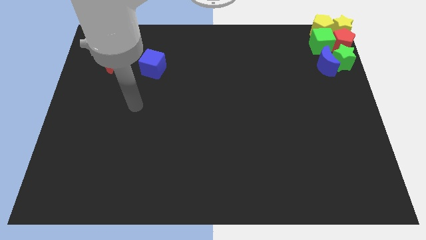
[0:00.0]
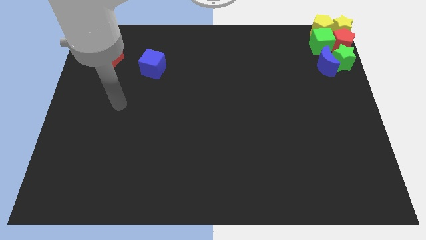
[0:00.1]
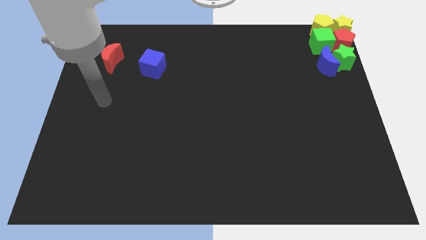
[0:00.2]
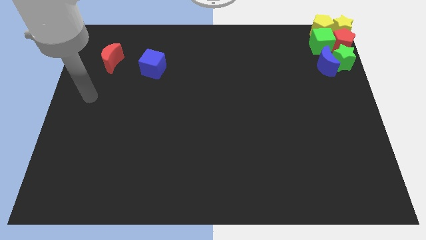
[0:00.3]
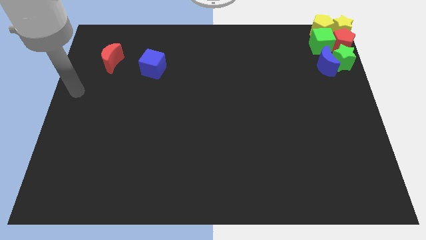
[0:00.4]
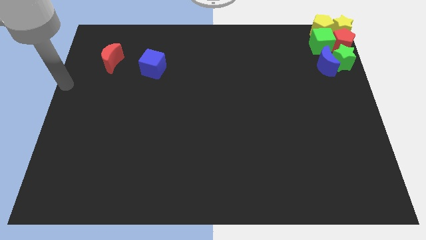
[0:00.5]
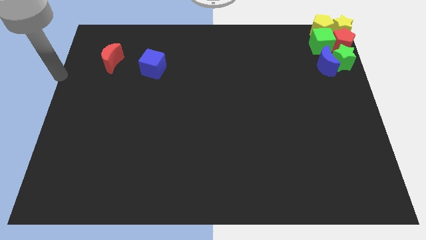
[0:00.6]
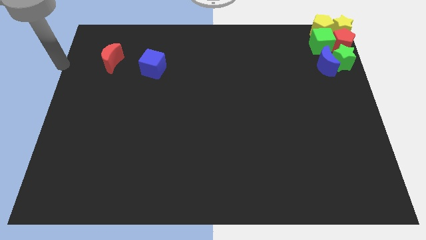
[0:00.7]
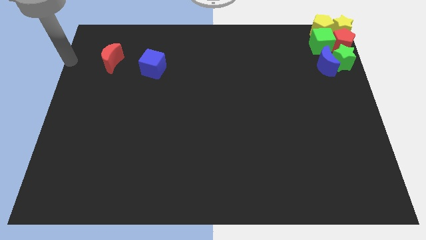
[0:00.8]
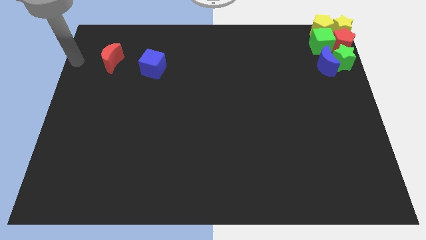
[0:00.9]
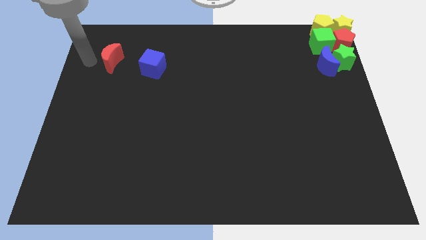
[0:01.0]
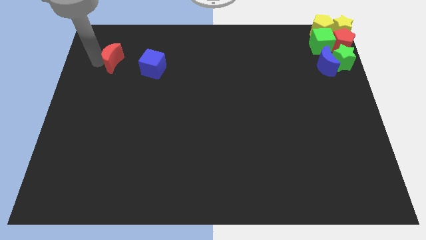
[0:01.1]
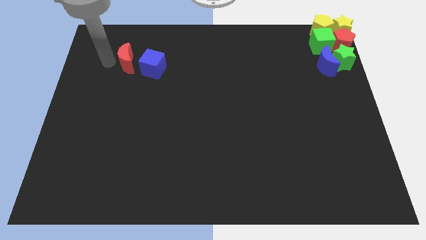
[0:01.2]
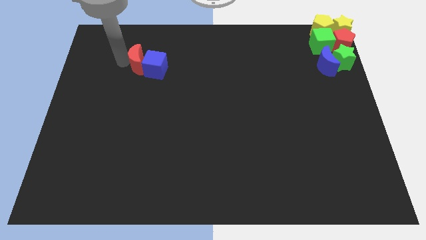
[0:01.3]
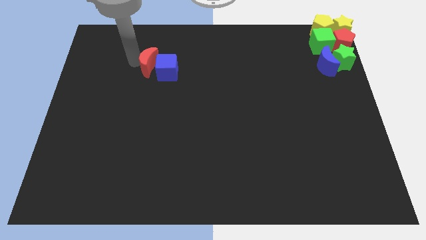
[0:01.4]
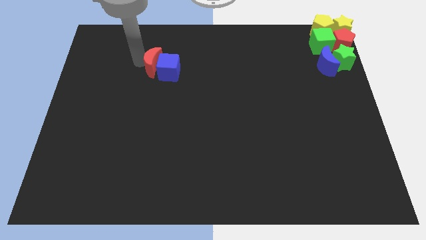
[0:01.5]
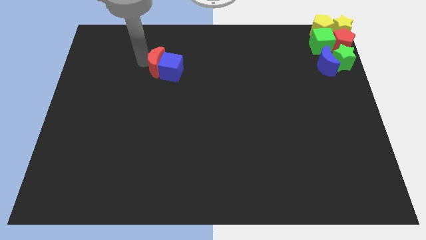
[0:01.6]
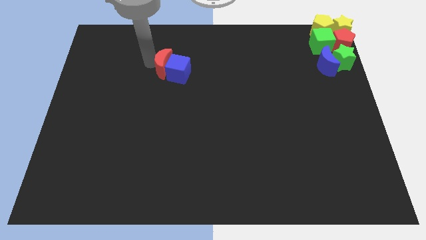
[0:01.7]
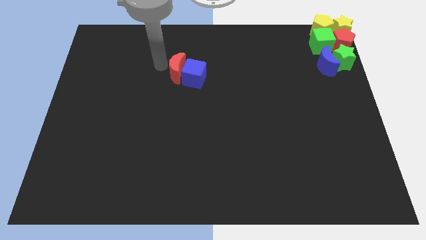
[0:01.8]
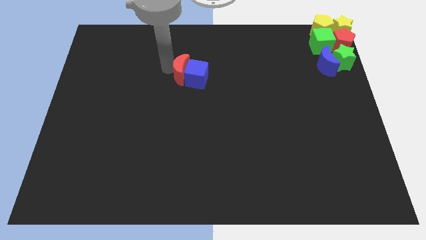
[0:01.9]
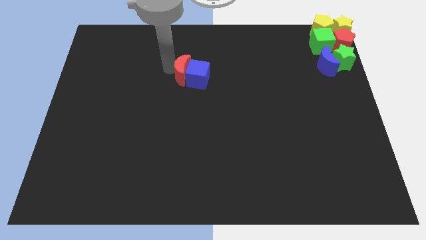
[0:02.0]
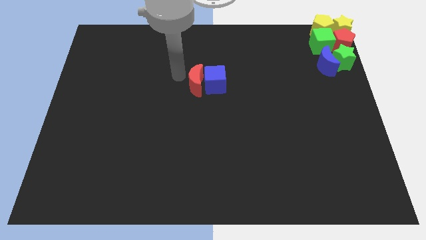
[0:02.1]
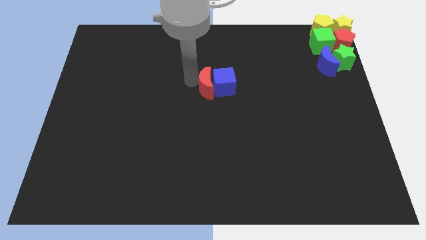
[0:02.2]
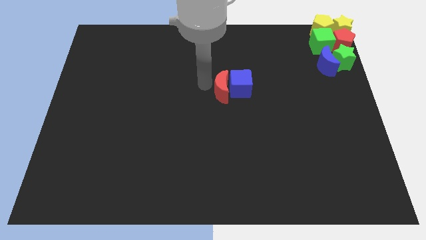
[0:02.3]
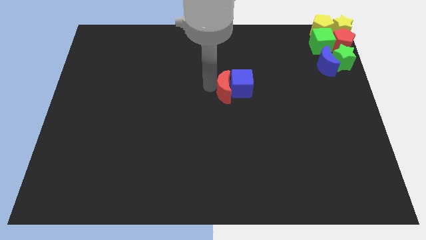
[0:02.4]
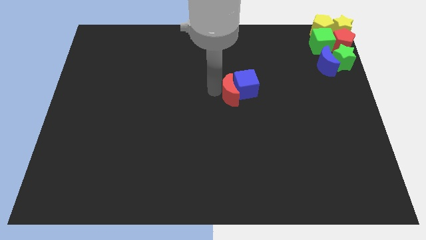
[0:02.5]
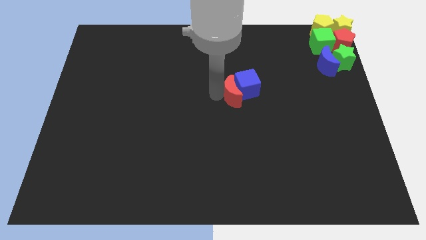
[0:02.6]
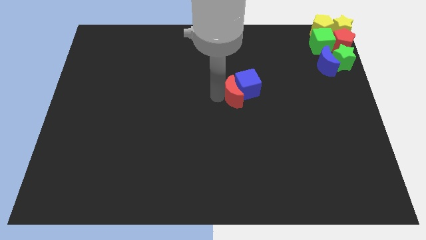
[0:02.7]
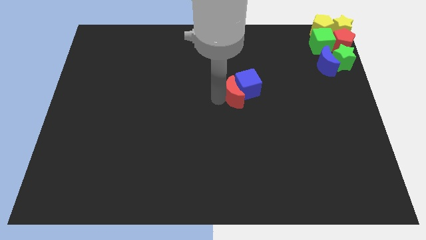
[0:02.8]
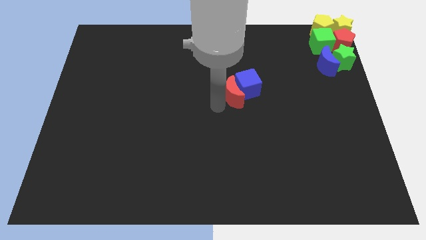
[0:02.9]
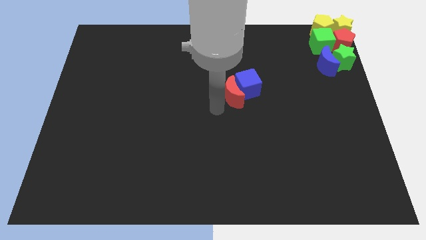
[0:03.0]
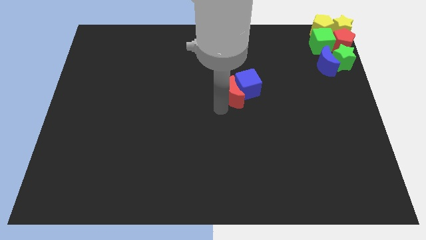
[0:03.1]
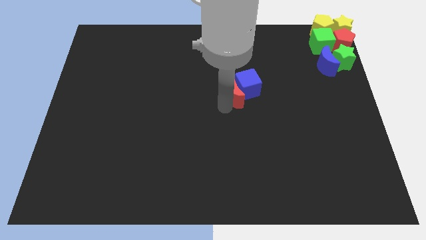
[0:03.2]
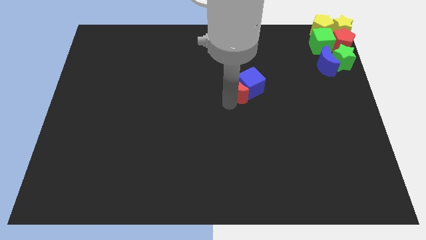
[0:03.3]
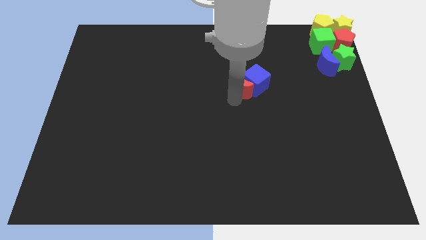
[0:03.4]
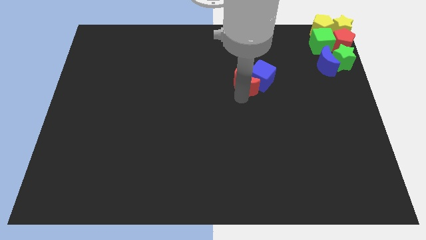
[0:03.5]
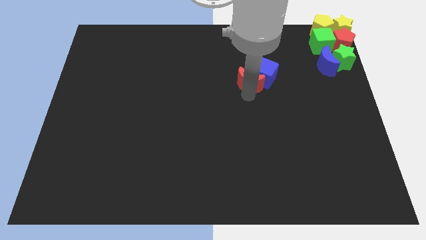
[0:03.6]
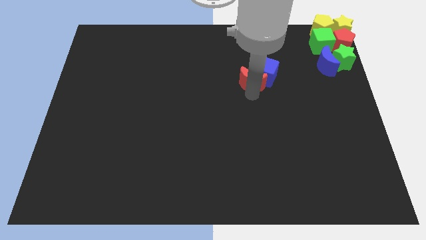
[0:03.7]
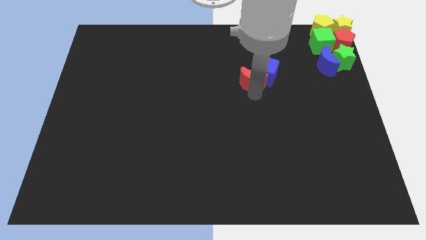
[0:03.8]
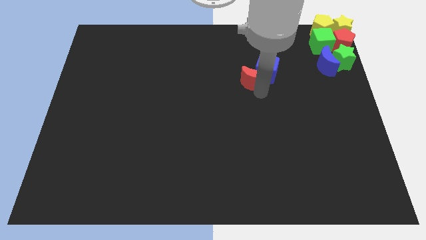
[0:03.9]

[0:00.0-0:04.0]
move red crescent along with blue cube towards other blocks

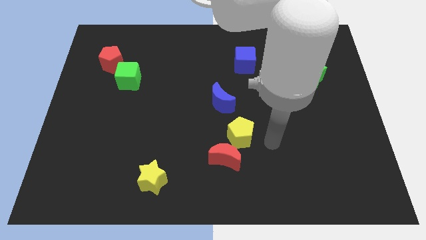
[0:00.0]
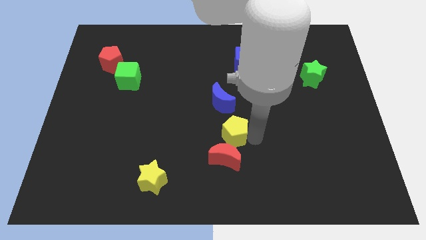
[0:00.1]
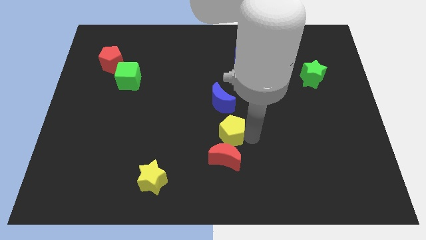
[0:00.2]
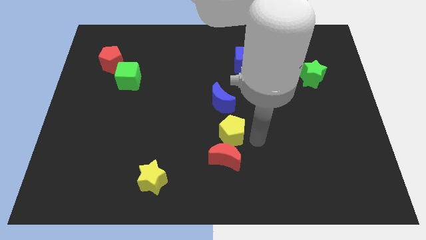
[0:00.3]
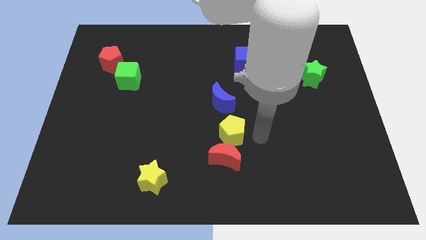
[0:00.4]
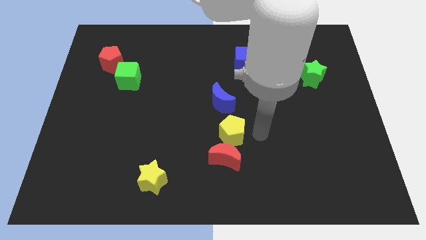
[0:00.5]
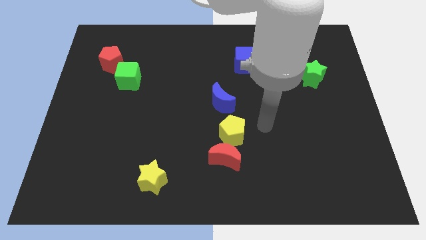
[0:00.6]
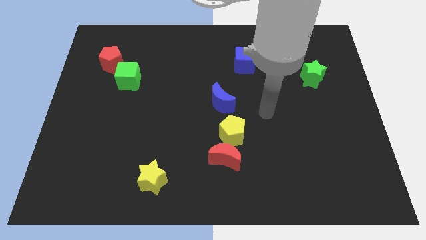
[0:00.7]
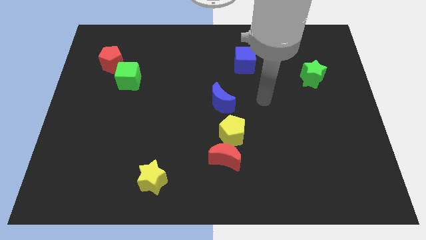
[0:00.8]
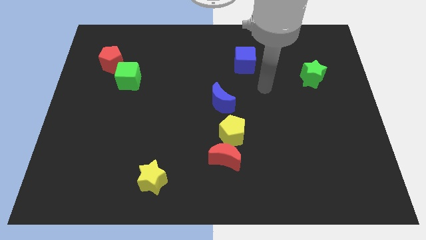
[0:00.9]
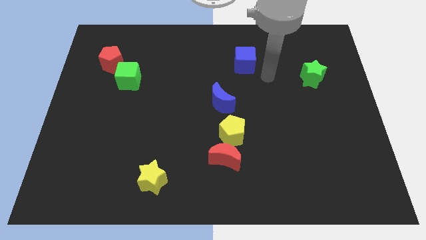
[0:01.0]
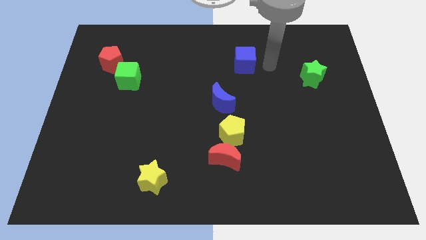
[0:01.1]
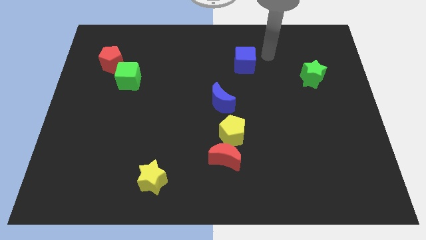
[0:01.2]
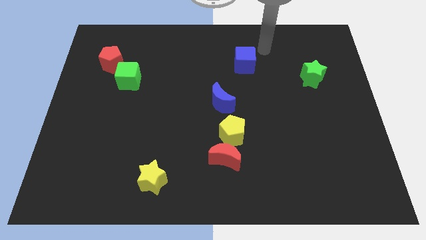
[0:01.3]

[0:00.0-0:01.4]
place the yellow pentagon above the red crescent

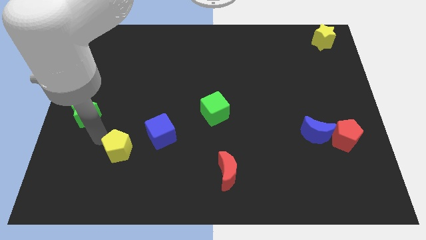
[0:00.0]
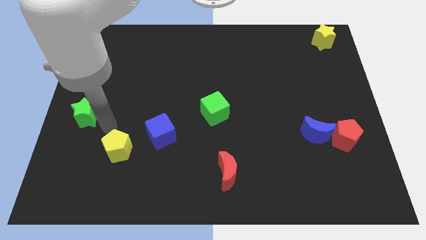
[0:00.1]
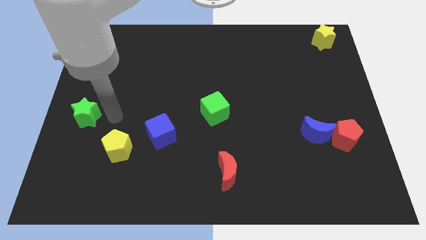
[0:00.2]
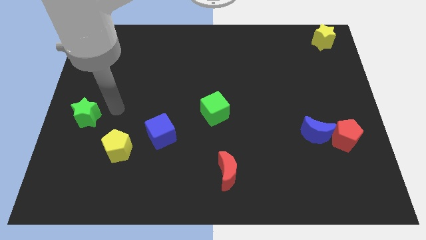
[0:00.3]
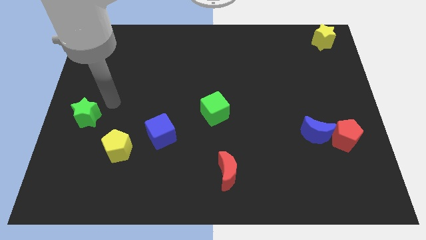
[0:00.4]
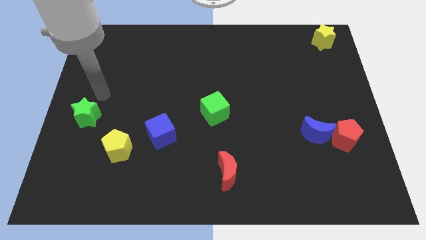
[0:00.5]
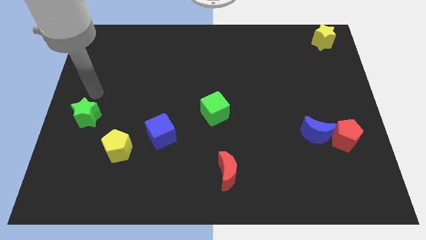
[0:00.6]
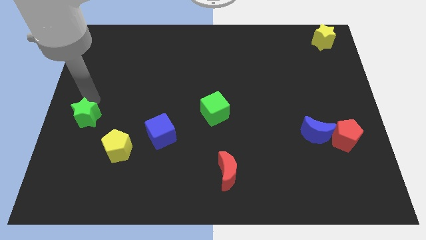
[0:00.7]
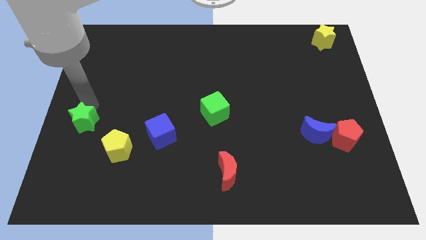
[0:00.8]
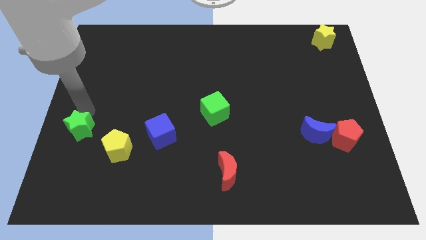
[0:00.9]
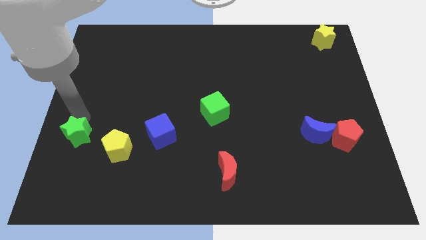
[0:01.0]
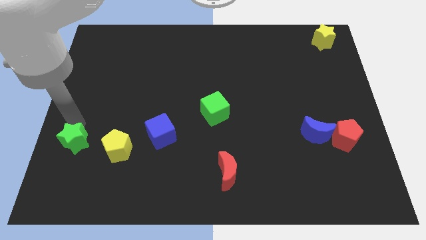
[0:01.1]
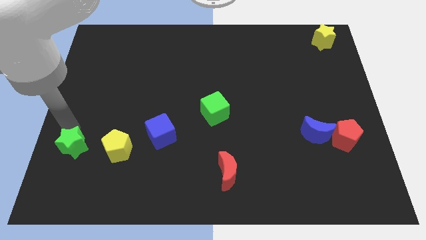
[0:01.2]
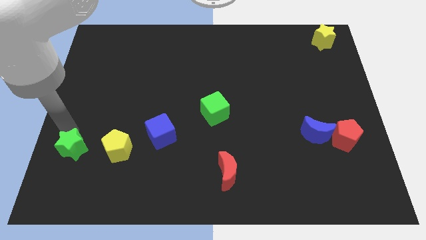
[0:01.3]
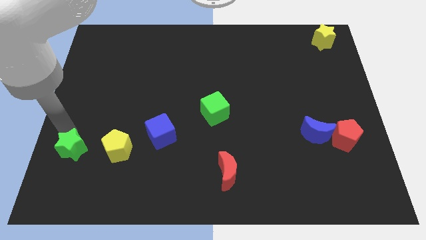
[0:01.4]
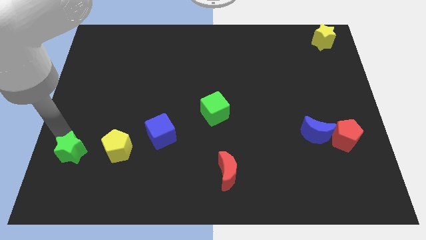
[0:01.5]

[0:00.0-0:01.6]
push the green star parallel left to the yellow pentagon

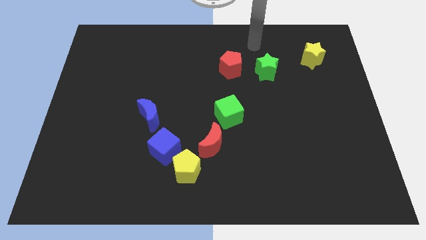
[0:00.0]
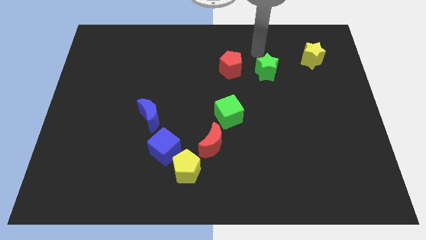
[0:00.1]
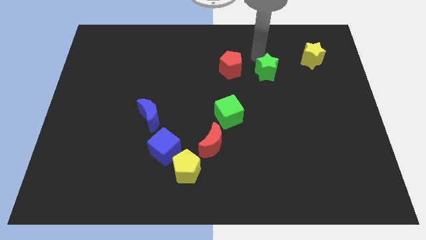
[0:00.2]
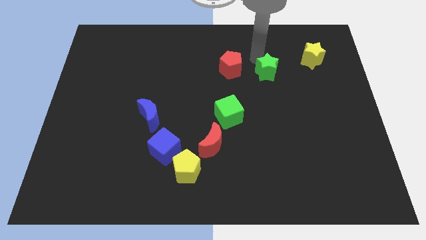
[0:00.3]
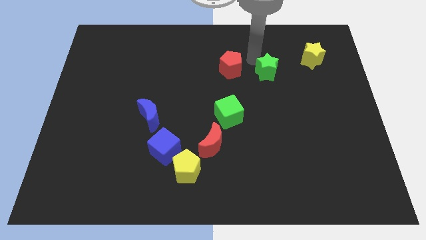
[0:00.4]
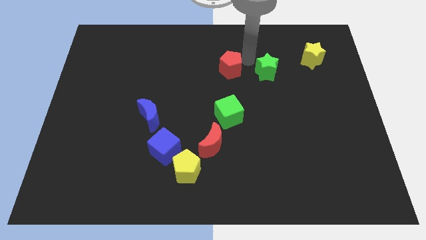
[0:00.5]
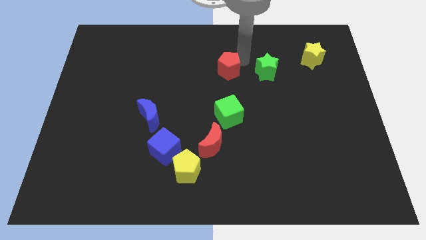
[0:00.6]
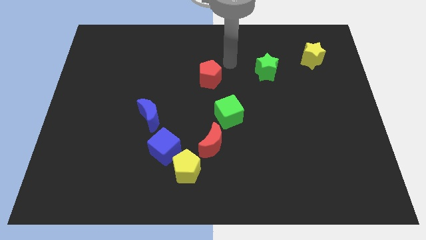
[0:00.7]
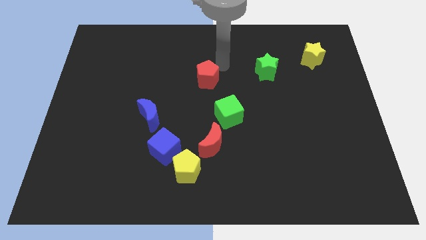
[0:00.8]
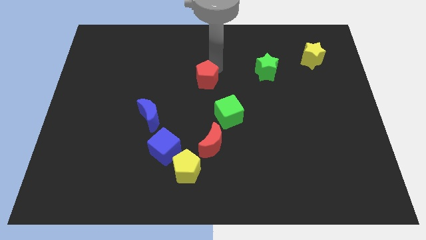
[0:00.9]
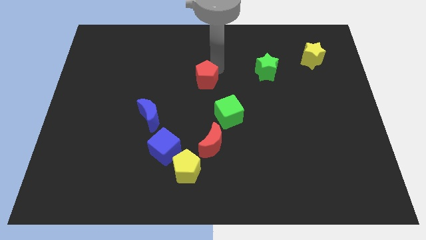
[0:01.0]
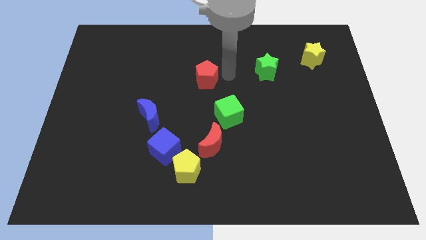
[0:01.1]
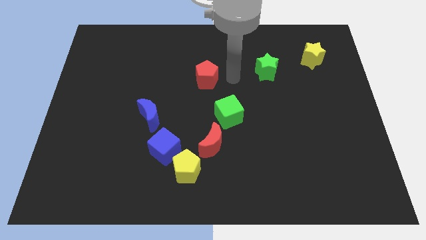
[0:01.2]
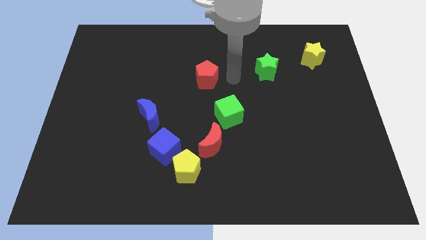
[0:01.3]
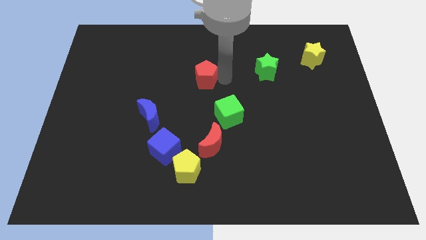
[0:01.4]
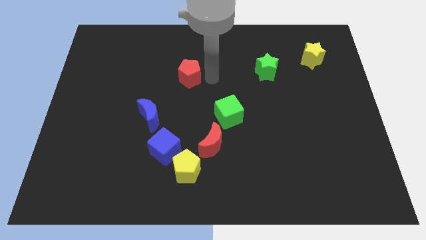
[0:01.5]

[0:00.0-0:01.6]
slide the red pentagon diagonally on the top left side of the green cube
